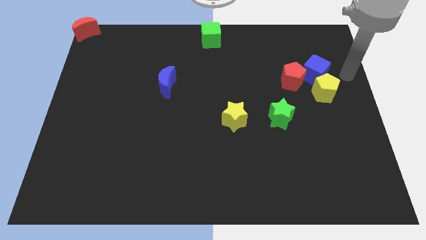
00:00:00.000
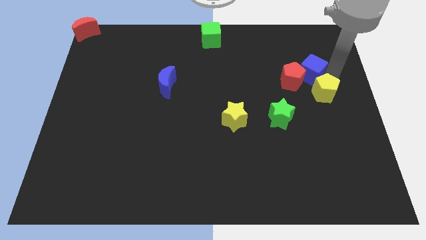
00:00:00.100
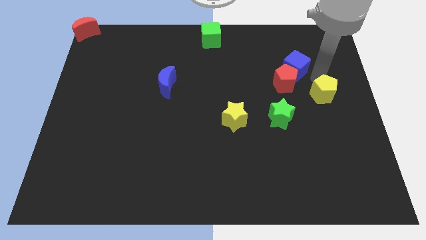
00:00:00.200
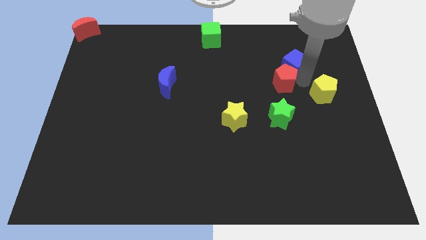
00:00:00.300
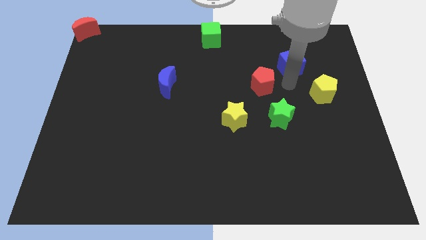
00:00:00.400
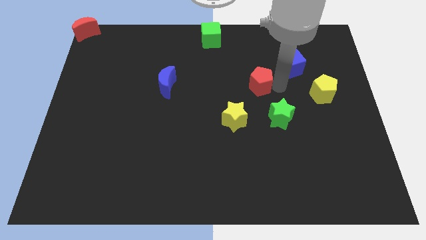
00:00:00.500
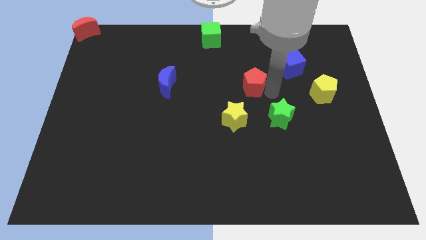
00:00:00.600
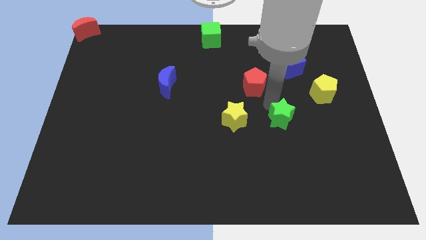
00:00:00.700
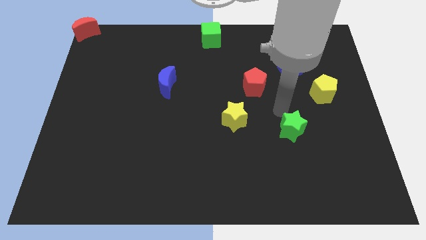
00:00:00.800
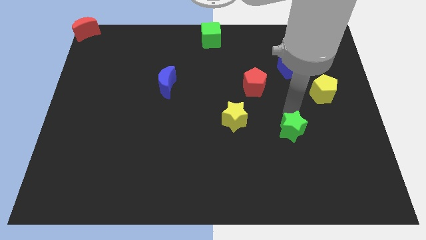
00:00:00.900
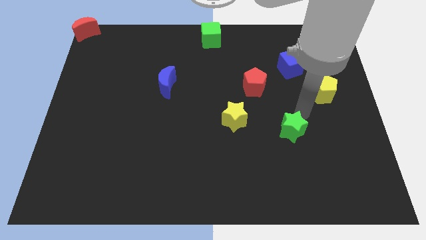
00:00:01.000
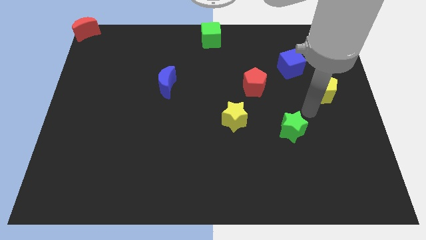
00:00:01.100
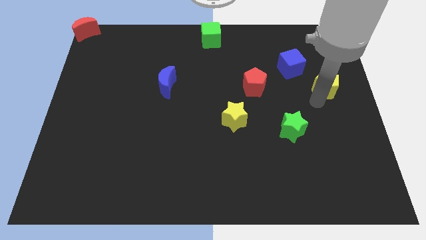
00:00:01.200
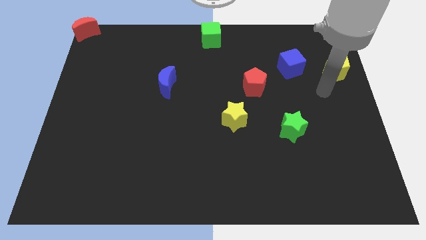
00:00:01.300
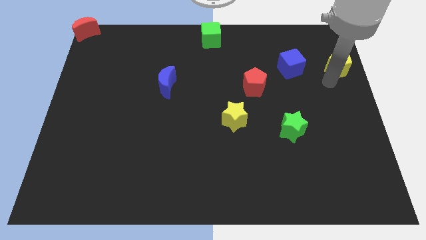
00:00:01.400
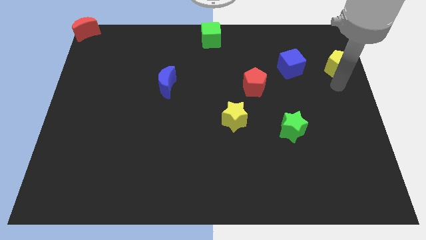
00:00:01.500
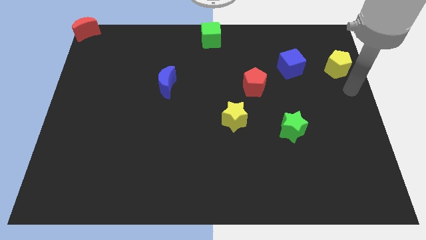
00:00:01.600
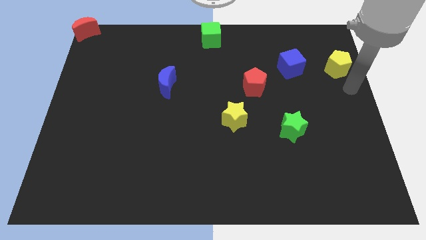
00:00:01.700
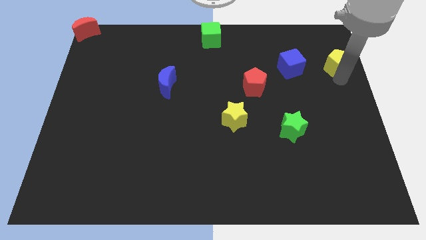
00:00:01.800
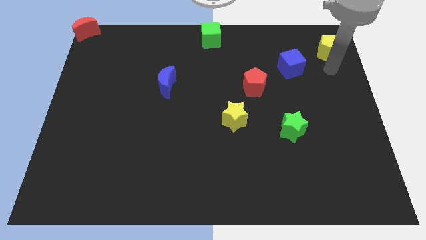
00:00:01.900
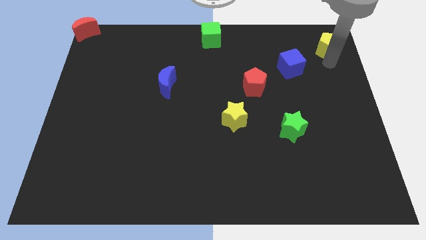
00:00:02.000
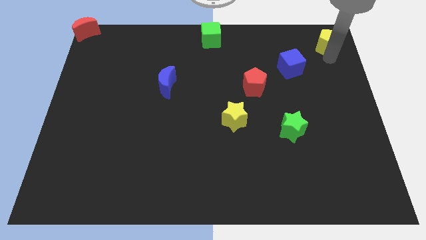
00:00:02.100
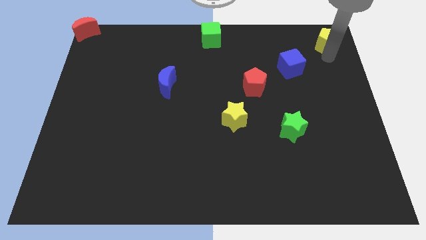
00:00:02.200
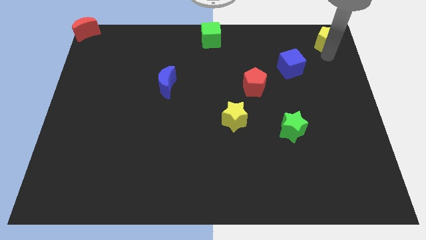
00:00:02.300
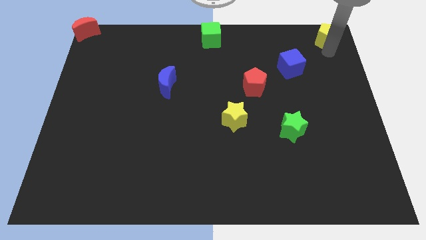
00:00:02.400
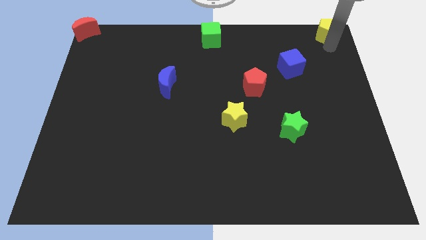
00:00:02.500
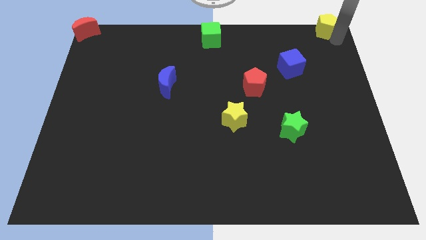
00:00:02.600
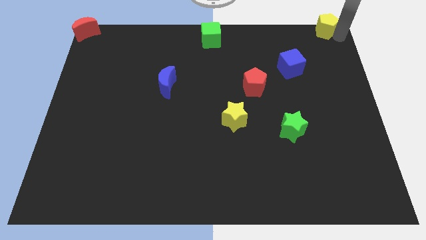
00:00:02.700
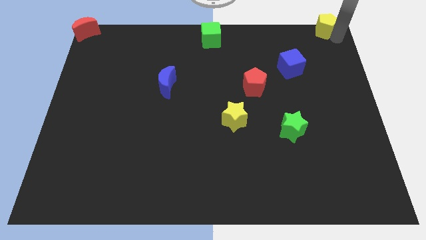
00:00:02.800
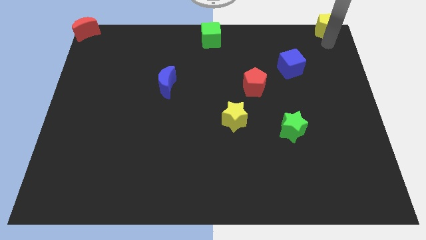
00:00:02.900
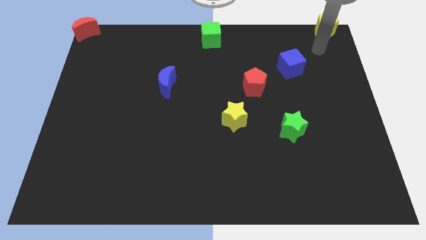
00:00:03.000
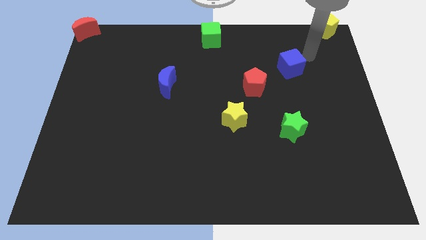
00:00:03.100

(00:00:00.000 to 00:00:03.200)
move the yellow pentagon to the top right of the board

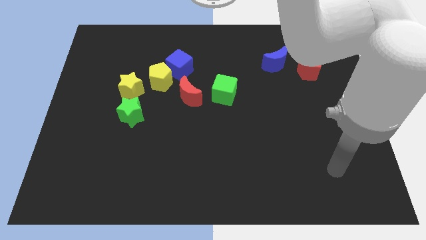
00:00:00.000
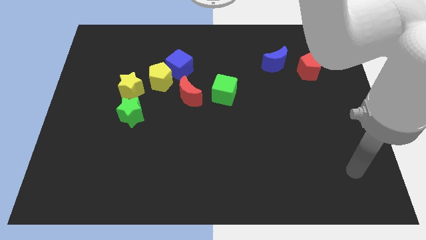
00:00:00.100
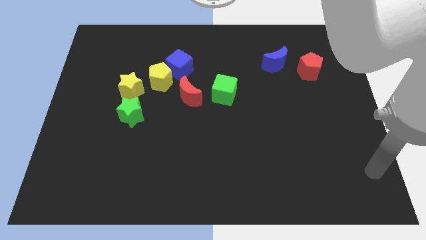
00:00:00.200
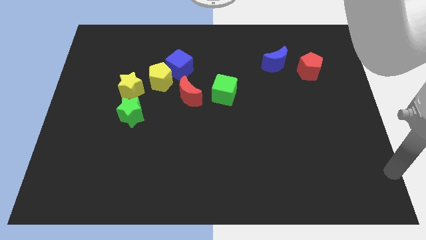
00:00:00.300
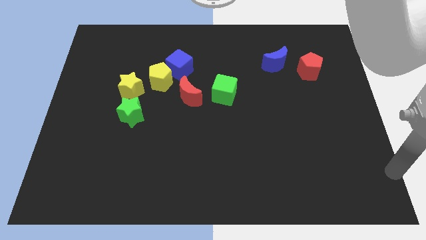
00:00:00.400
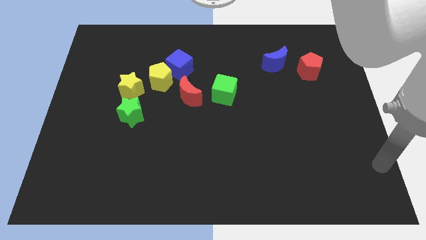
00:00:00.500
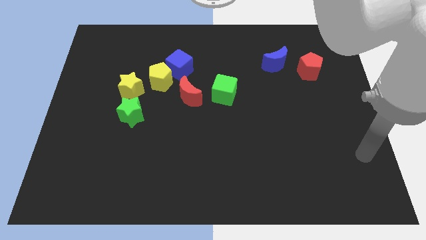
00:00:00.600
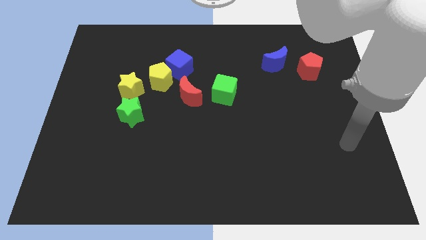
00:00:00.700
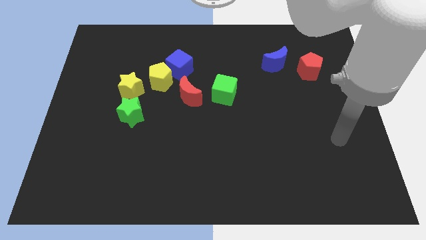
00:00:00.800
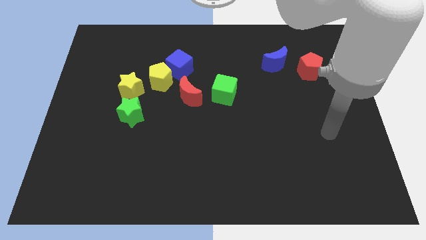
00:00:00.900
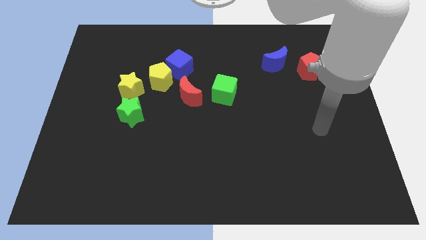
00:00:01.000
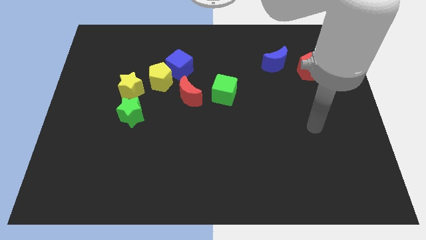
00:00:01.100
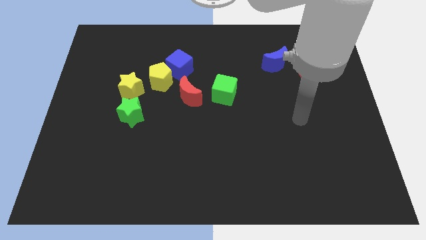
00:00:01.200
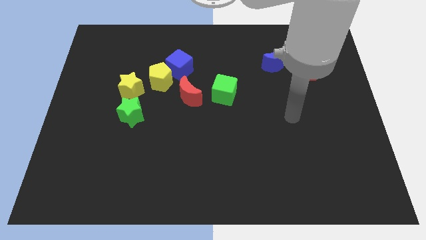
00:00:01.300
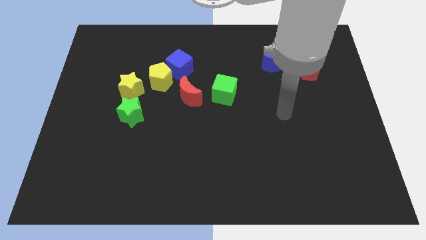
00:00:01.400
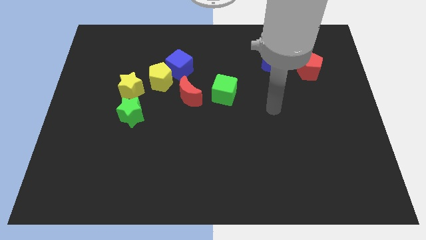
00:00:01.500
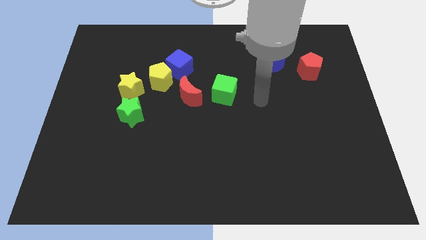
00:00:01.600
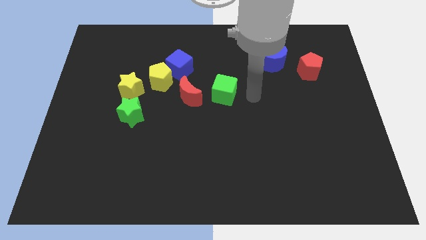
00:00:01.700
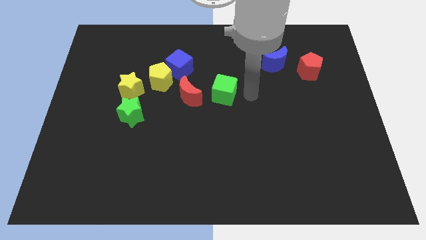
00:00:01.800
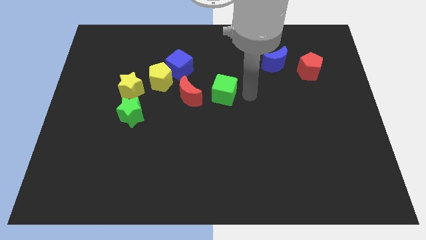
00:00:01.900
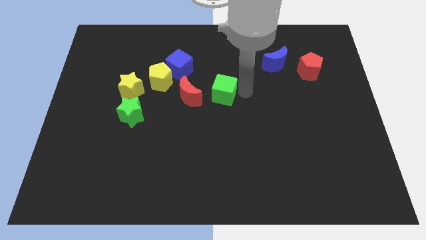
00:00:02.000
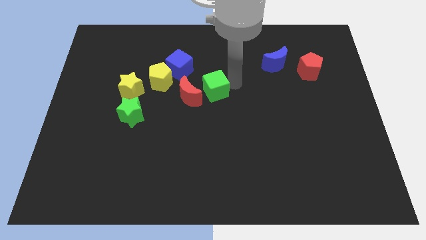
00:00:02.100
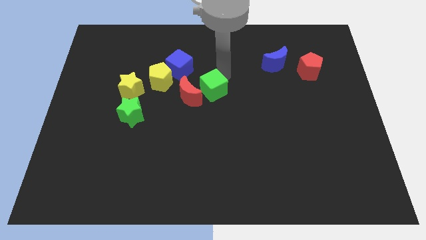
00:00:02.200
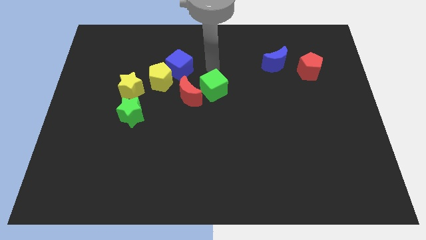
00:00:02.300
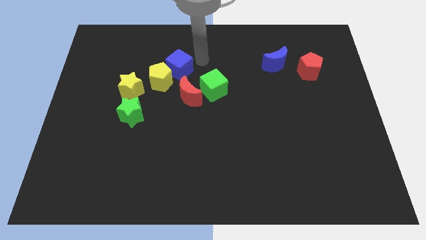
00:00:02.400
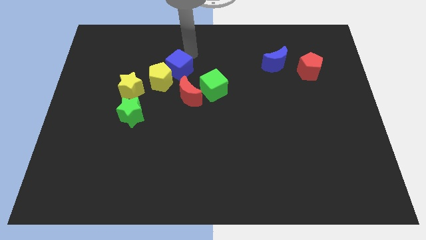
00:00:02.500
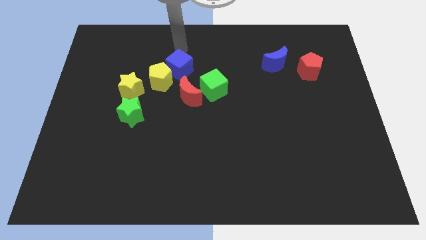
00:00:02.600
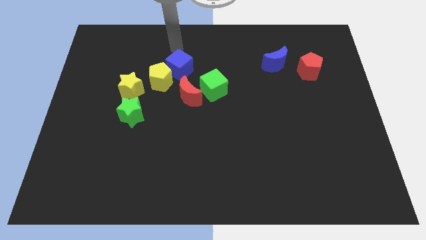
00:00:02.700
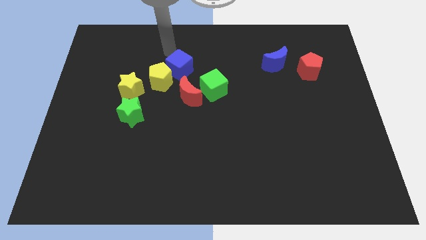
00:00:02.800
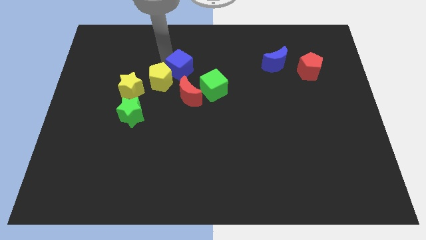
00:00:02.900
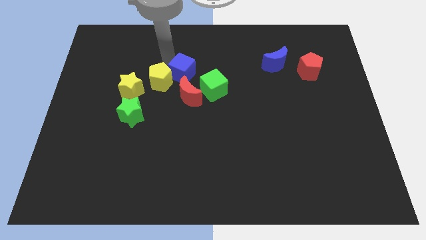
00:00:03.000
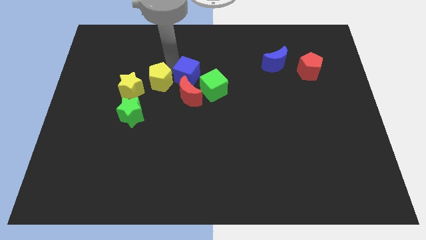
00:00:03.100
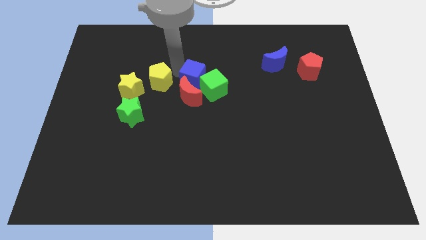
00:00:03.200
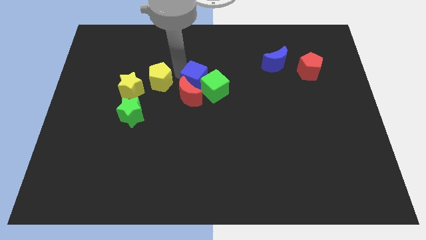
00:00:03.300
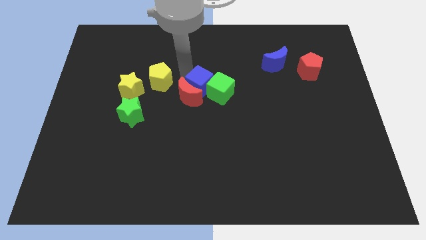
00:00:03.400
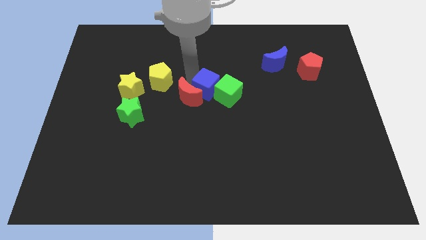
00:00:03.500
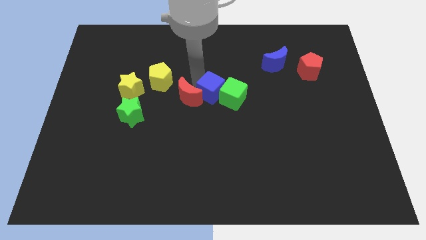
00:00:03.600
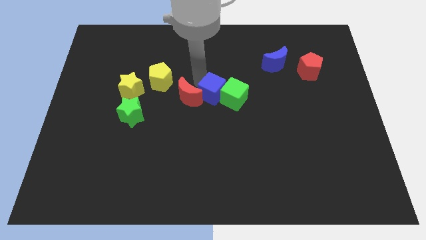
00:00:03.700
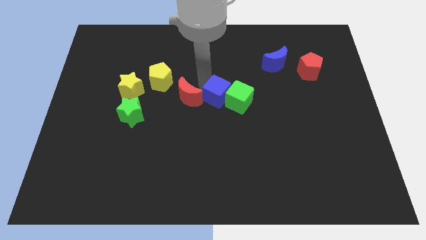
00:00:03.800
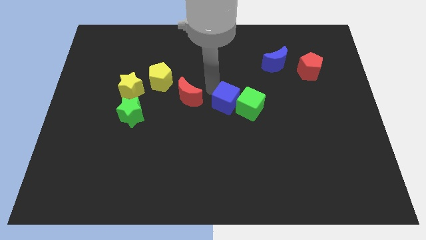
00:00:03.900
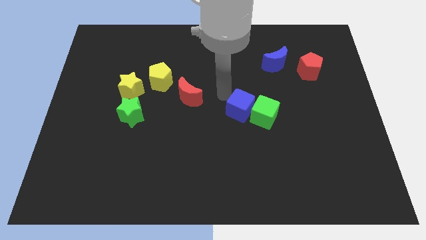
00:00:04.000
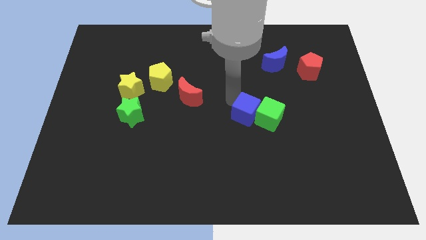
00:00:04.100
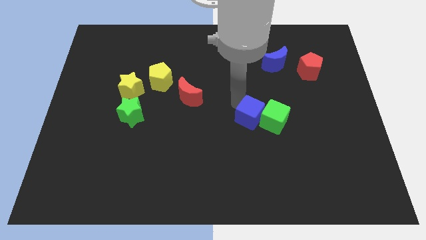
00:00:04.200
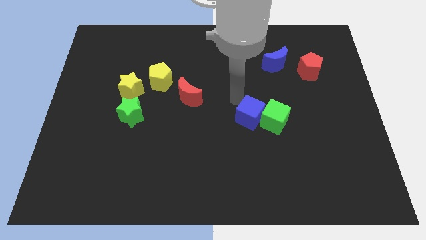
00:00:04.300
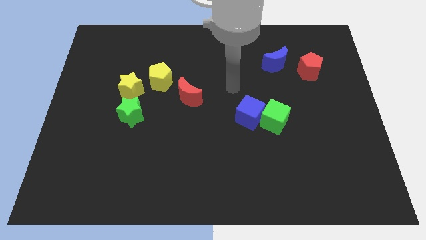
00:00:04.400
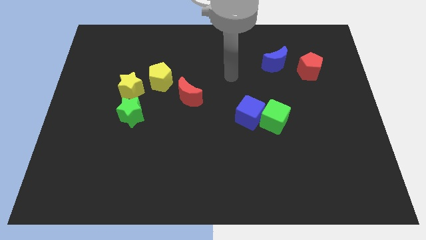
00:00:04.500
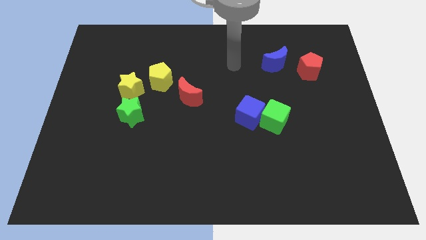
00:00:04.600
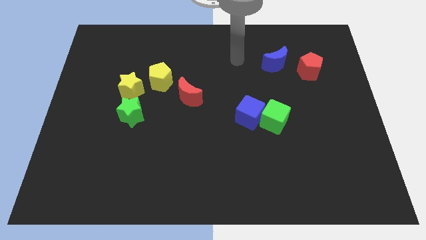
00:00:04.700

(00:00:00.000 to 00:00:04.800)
move blue cube along with green cube to right bottom of red moon

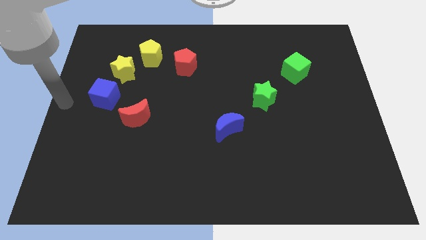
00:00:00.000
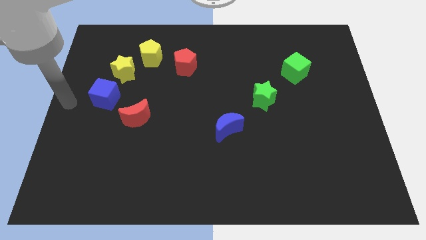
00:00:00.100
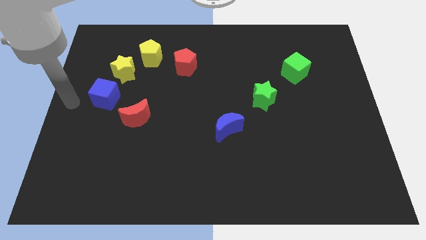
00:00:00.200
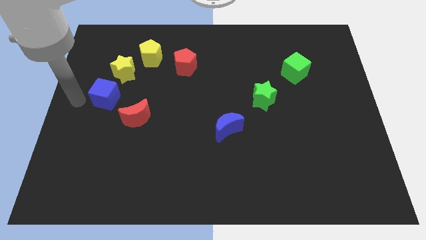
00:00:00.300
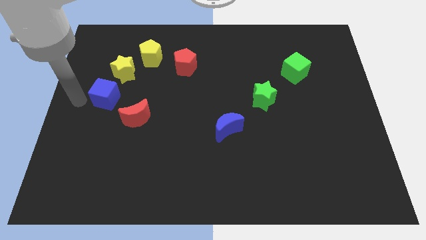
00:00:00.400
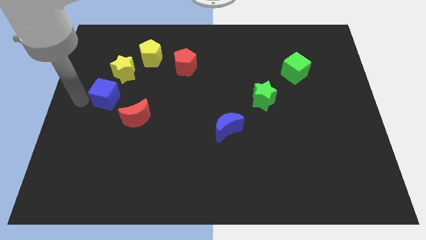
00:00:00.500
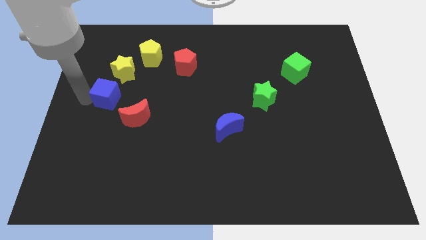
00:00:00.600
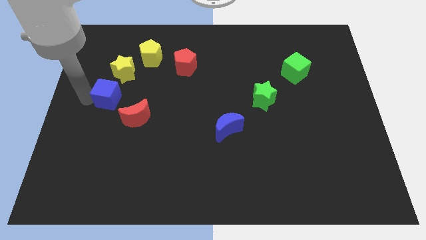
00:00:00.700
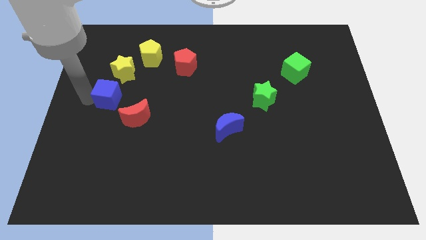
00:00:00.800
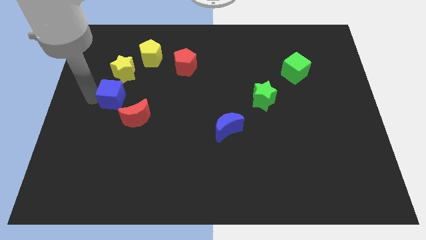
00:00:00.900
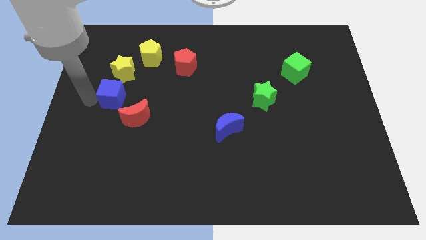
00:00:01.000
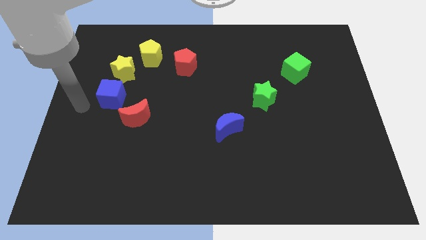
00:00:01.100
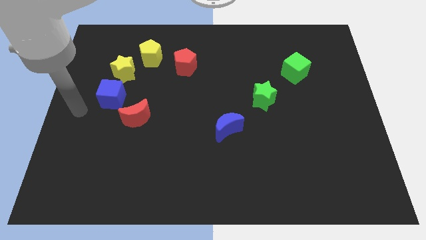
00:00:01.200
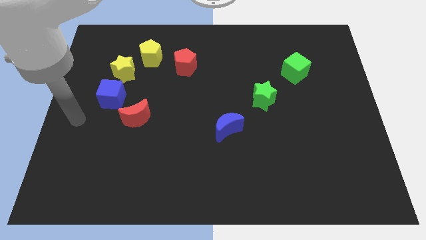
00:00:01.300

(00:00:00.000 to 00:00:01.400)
slightly push the blue cube between red moon and yellow star
